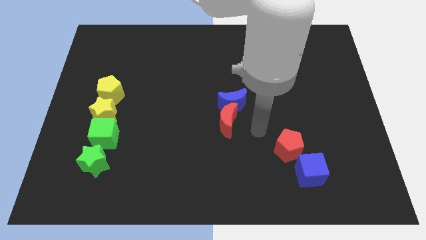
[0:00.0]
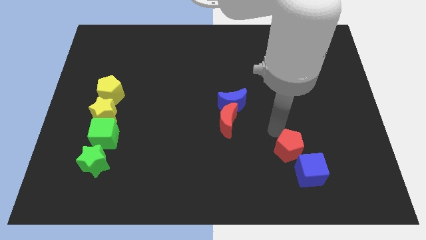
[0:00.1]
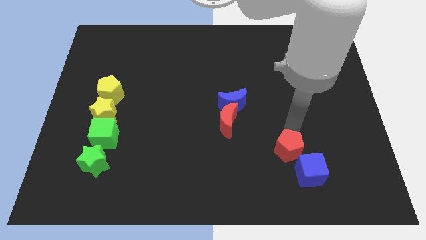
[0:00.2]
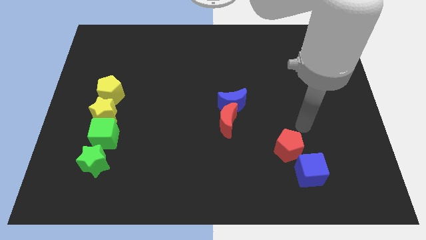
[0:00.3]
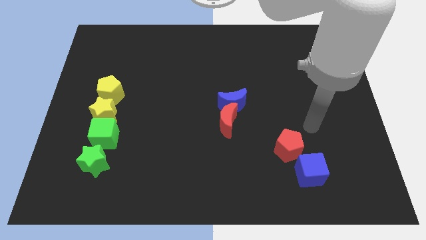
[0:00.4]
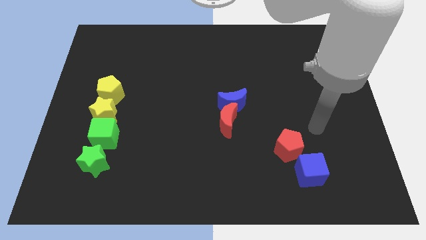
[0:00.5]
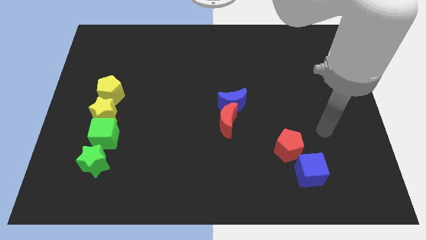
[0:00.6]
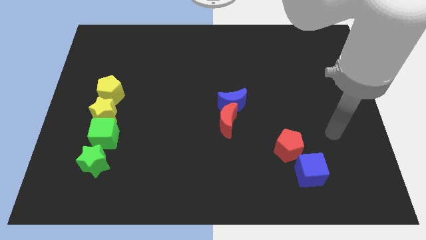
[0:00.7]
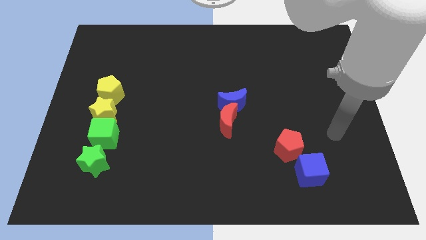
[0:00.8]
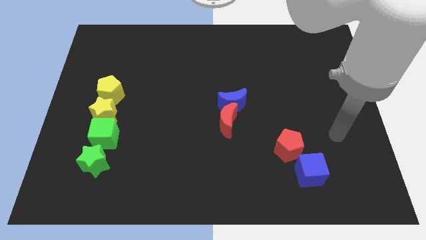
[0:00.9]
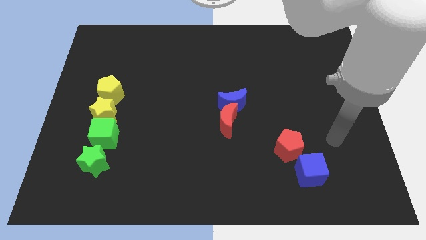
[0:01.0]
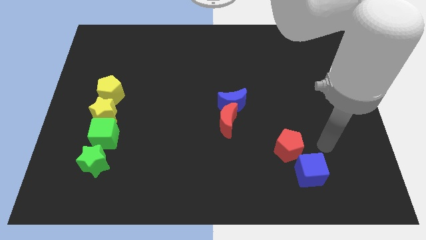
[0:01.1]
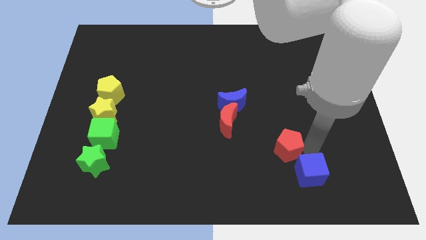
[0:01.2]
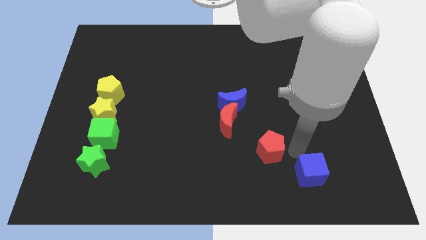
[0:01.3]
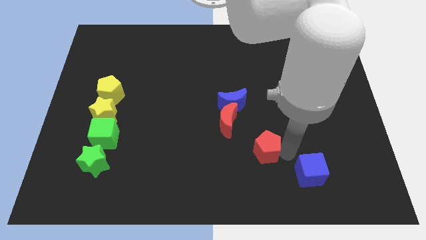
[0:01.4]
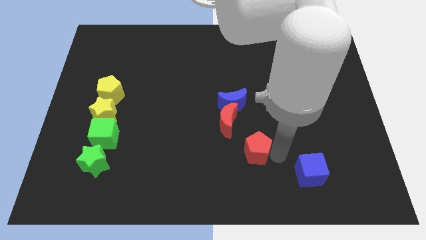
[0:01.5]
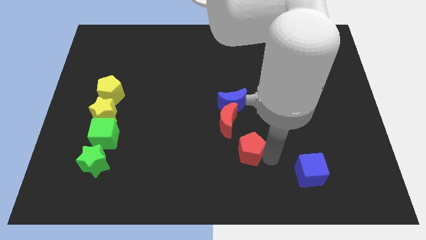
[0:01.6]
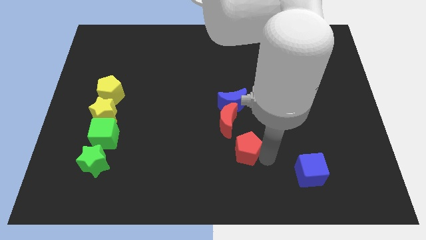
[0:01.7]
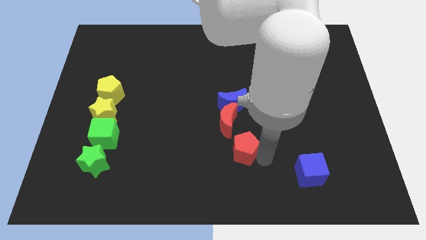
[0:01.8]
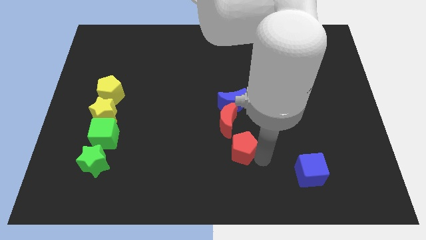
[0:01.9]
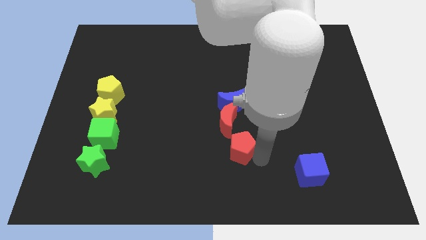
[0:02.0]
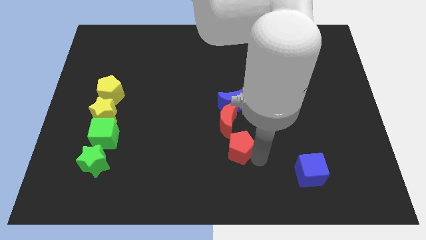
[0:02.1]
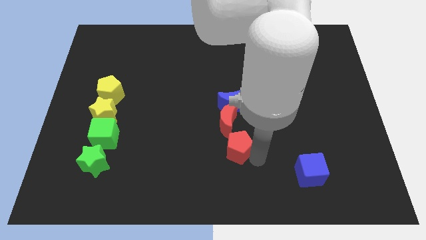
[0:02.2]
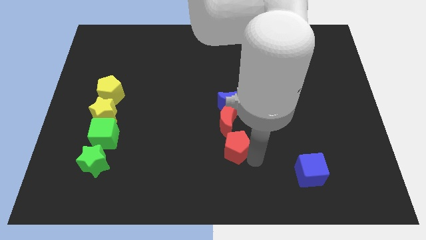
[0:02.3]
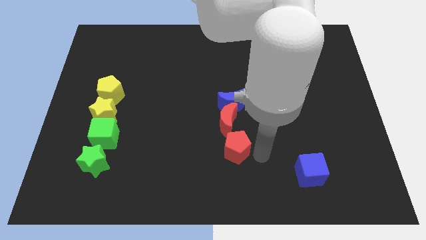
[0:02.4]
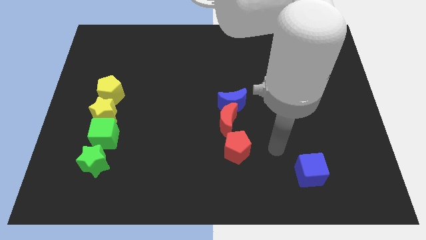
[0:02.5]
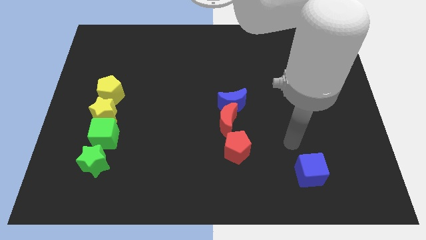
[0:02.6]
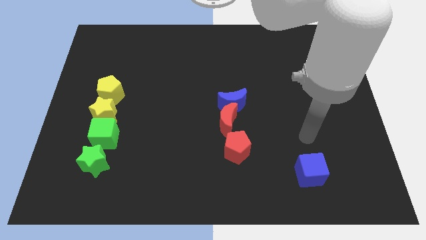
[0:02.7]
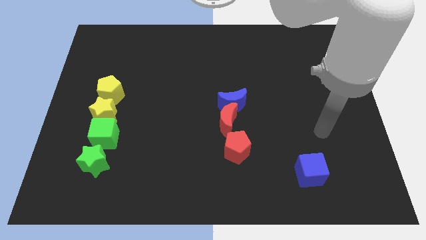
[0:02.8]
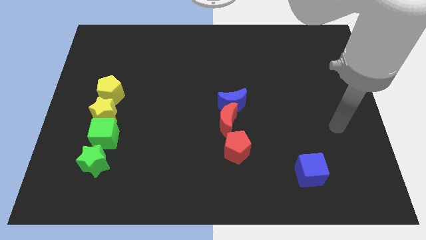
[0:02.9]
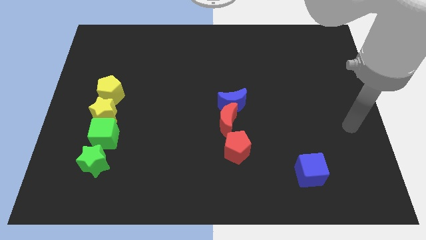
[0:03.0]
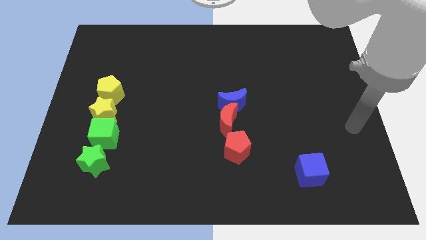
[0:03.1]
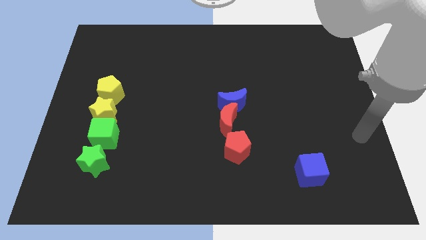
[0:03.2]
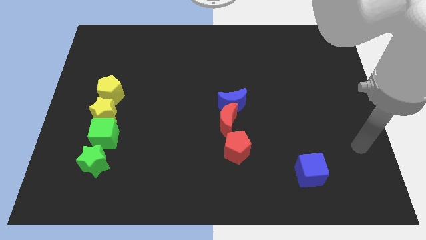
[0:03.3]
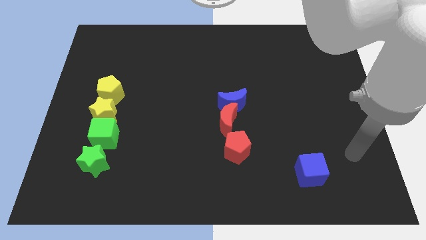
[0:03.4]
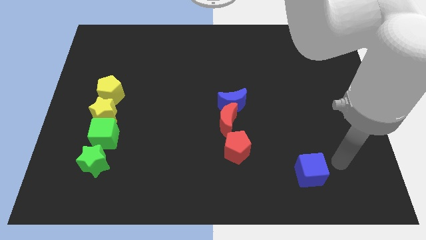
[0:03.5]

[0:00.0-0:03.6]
drag the red pentagon to the bottom side of the red crescent

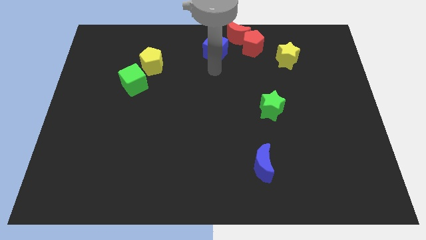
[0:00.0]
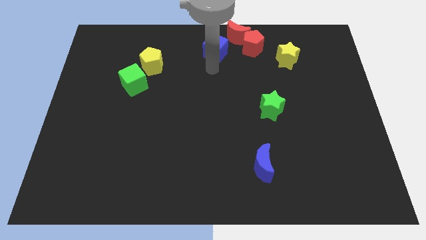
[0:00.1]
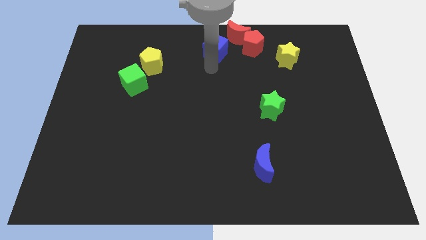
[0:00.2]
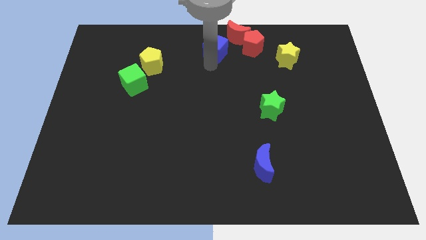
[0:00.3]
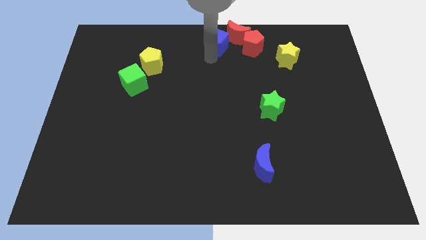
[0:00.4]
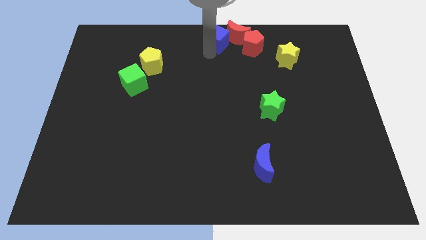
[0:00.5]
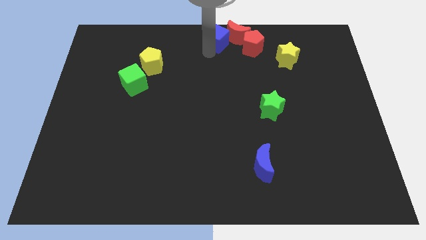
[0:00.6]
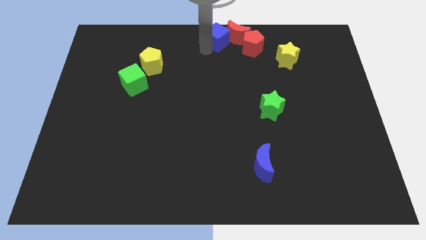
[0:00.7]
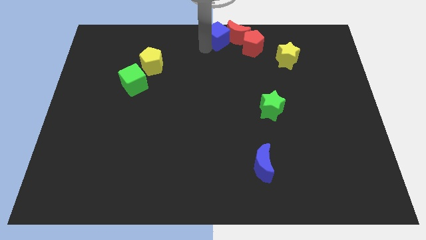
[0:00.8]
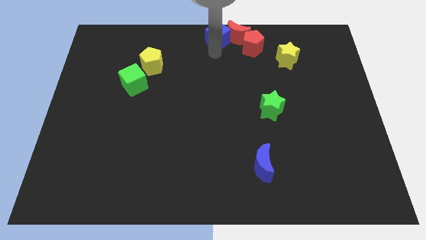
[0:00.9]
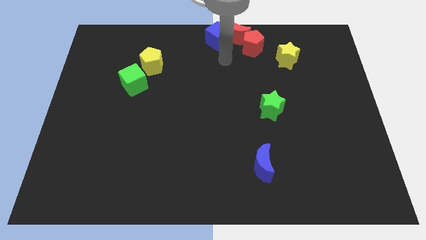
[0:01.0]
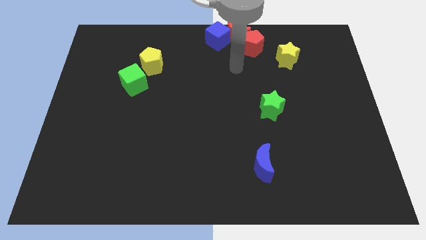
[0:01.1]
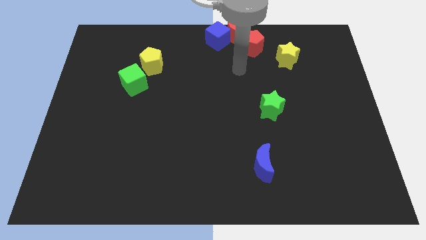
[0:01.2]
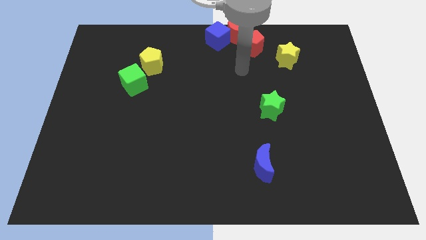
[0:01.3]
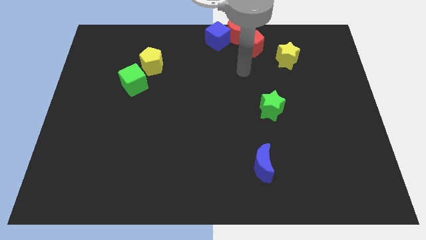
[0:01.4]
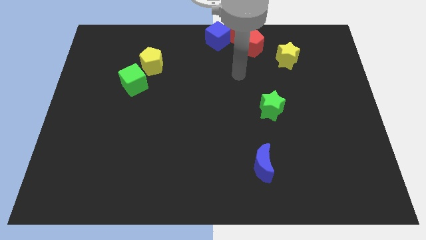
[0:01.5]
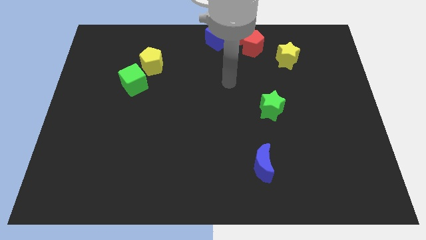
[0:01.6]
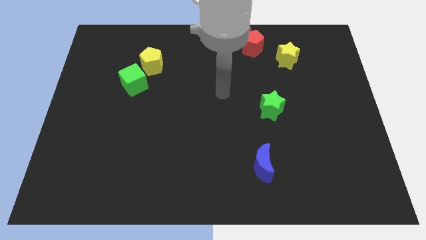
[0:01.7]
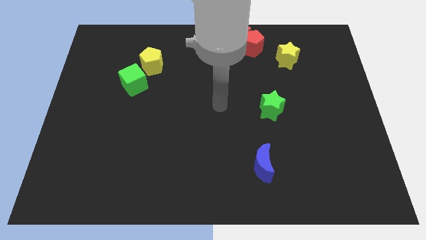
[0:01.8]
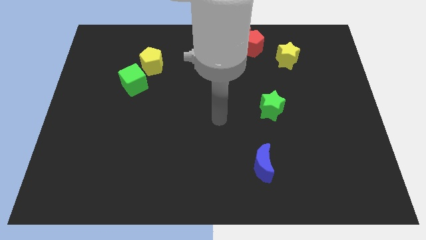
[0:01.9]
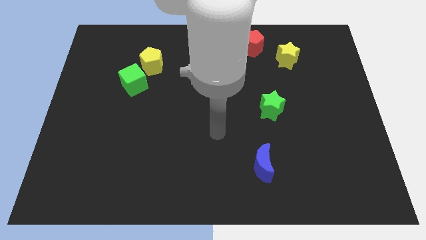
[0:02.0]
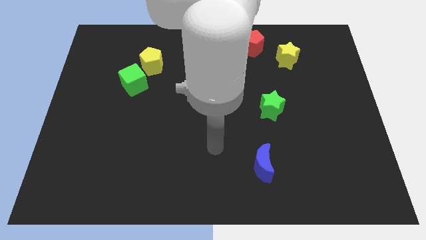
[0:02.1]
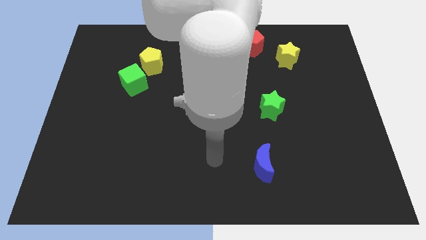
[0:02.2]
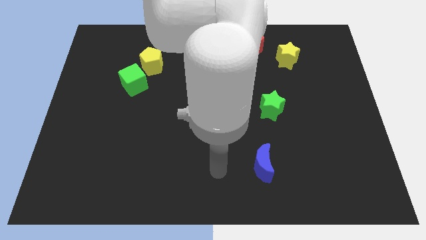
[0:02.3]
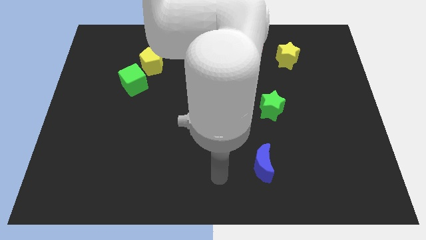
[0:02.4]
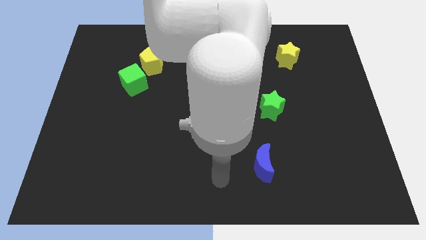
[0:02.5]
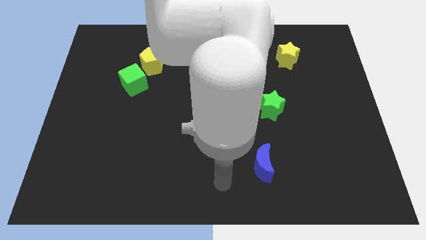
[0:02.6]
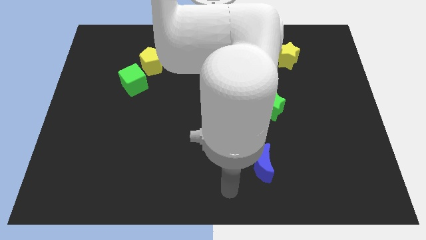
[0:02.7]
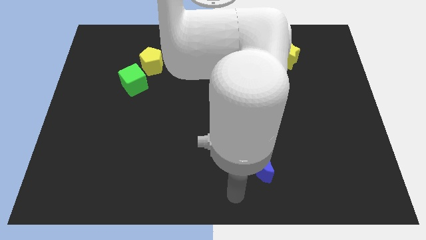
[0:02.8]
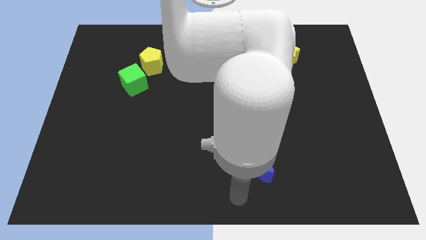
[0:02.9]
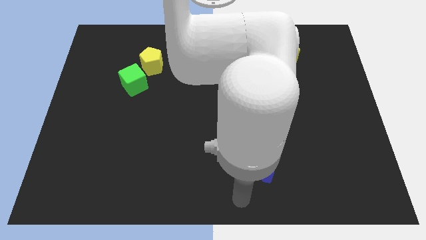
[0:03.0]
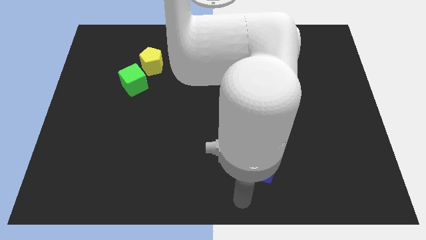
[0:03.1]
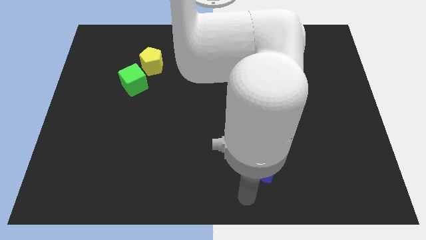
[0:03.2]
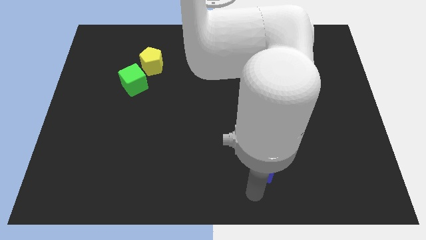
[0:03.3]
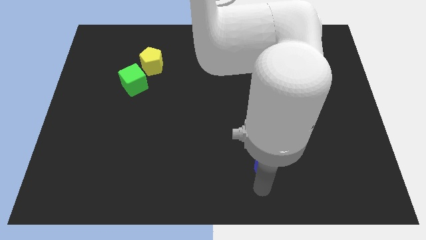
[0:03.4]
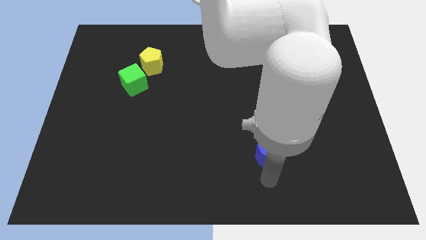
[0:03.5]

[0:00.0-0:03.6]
move your arm towards the blue crescent

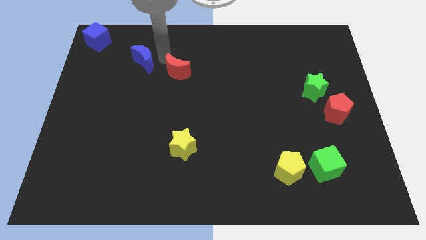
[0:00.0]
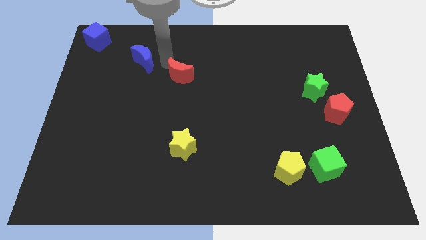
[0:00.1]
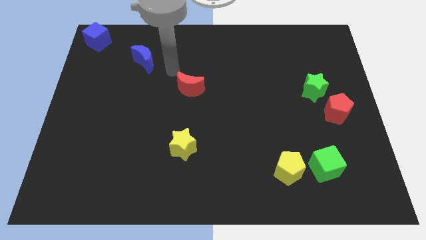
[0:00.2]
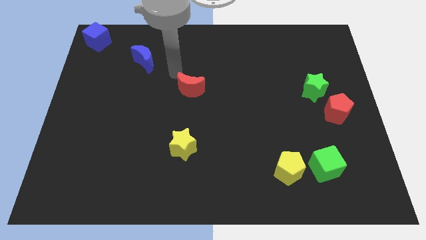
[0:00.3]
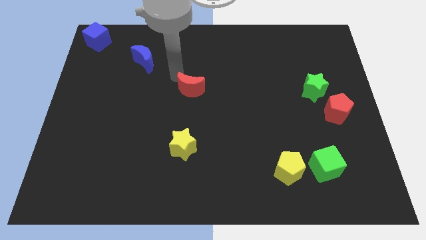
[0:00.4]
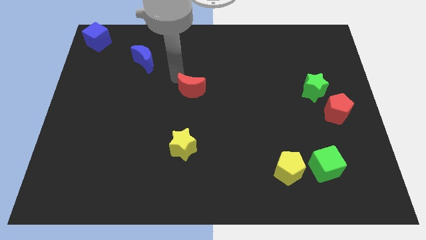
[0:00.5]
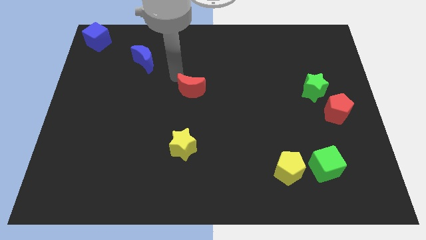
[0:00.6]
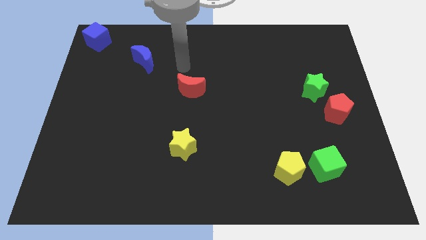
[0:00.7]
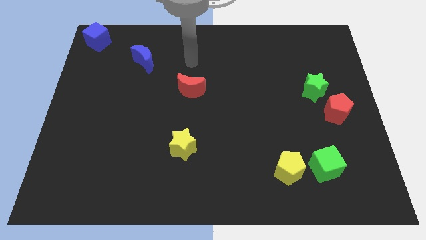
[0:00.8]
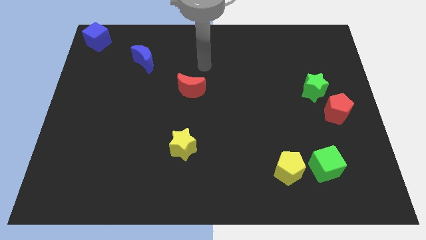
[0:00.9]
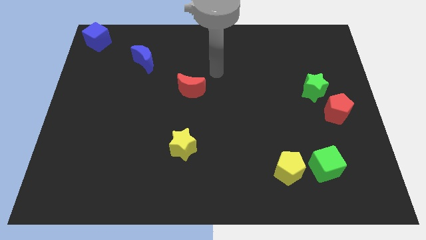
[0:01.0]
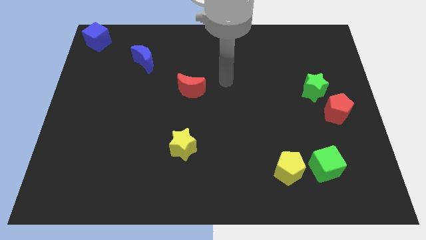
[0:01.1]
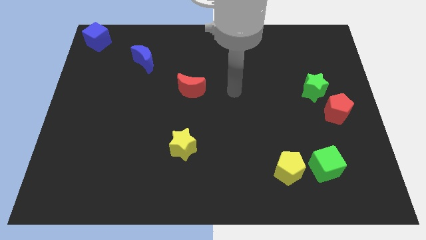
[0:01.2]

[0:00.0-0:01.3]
move red crescent vertically towards yellow star

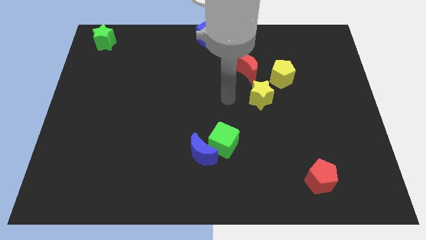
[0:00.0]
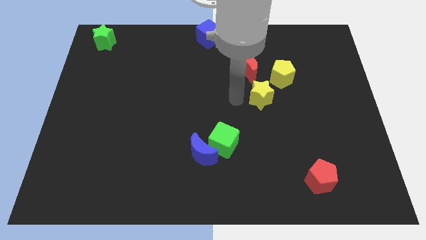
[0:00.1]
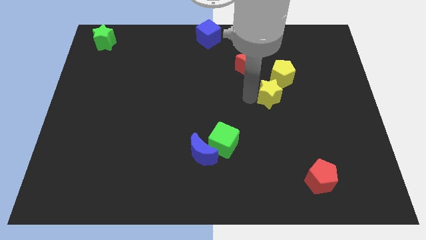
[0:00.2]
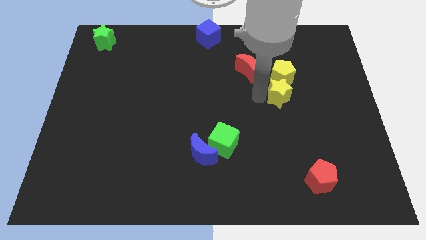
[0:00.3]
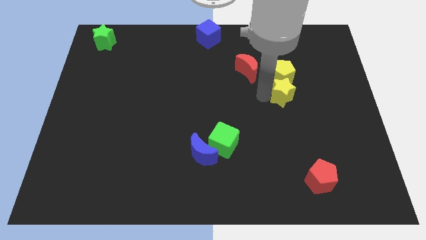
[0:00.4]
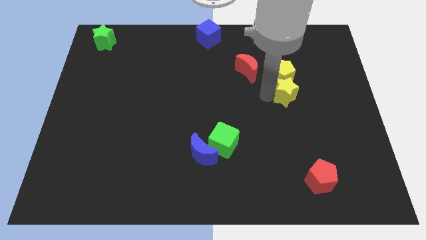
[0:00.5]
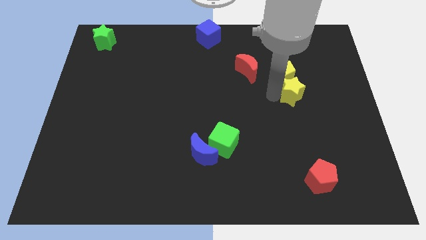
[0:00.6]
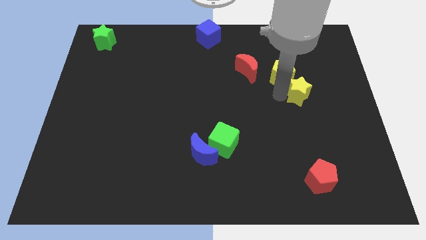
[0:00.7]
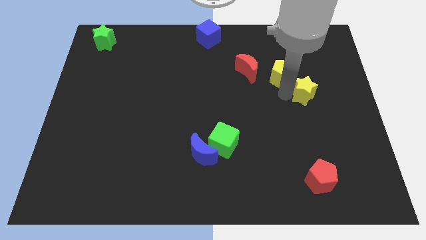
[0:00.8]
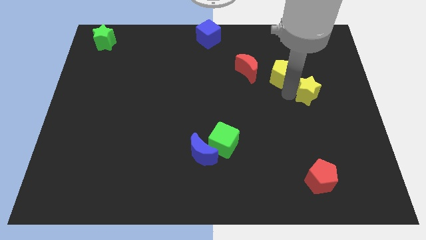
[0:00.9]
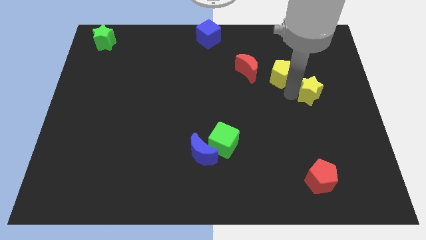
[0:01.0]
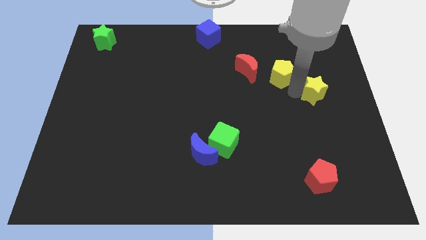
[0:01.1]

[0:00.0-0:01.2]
push the yellow star diagonally bottom right to the yellow pentagon
